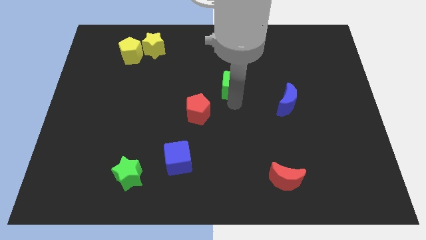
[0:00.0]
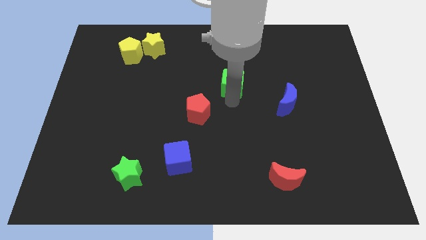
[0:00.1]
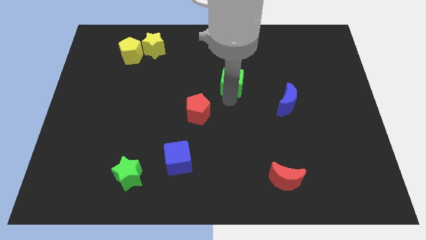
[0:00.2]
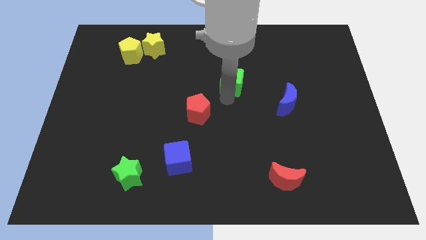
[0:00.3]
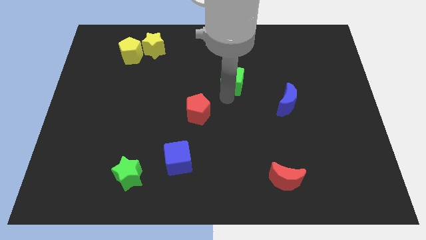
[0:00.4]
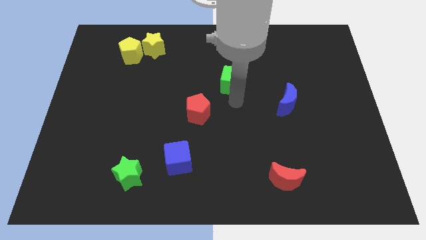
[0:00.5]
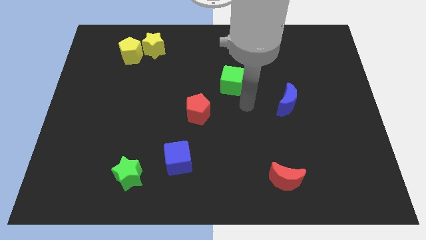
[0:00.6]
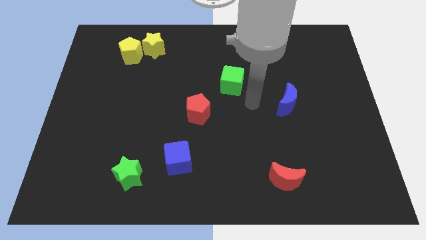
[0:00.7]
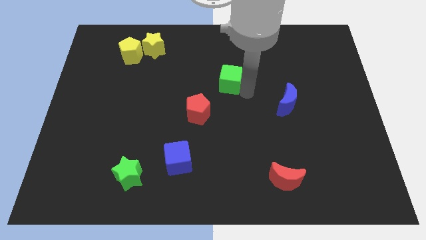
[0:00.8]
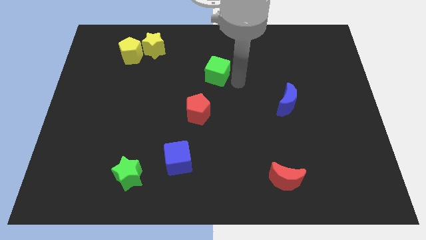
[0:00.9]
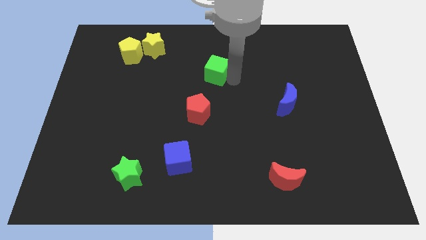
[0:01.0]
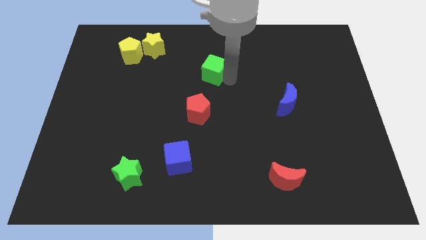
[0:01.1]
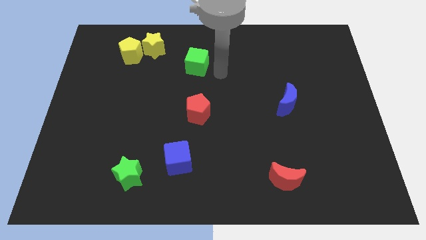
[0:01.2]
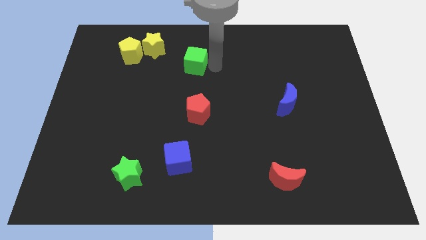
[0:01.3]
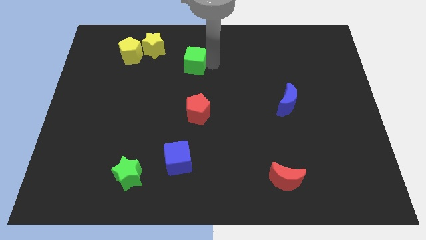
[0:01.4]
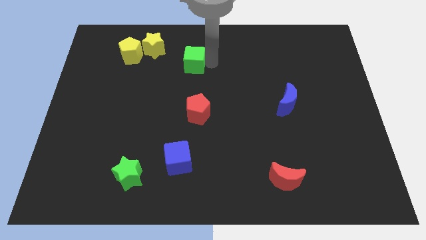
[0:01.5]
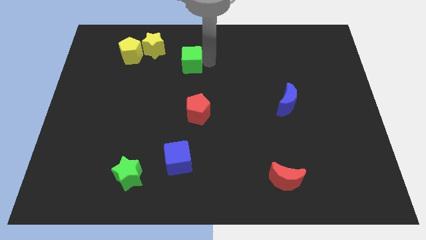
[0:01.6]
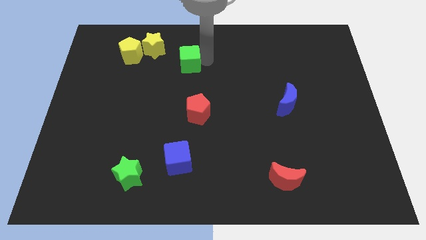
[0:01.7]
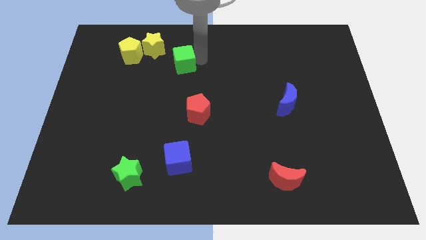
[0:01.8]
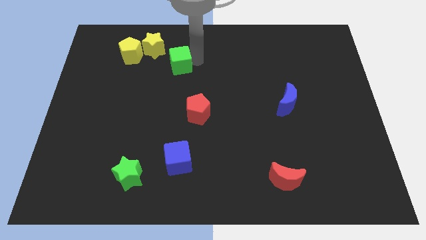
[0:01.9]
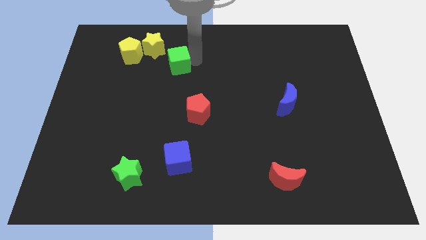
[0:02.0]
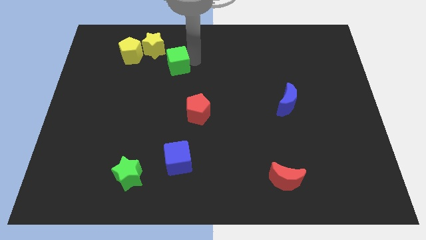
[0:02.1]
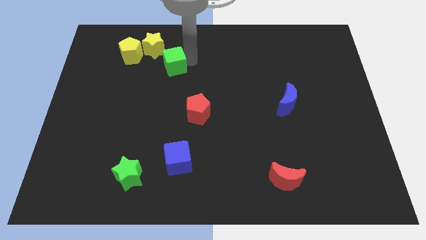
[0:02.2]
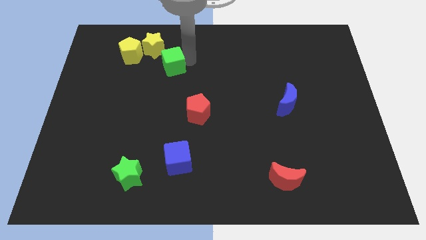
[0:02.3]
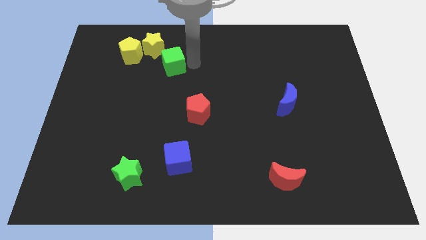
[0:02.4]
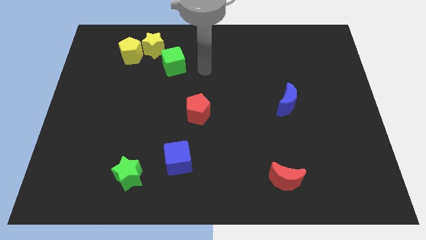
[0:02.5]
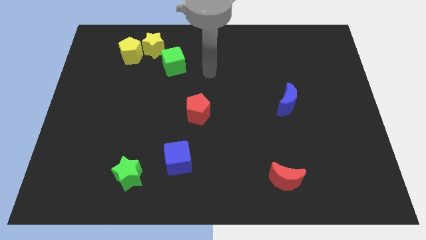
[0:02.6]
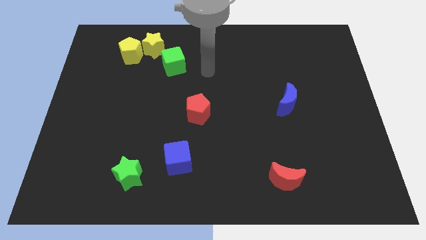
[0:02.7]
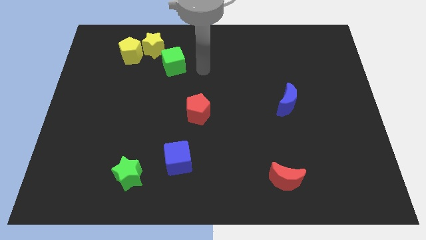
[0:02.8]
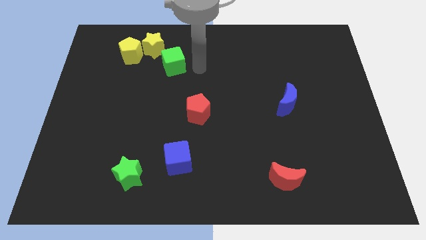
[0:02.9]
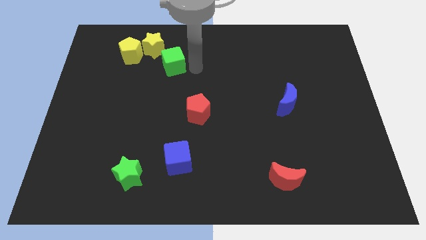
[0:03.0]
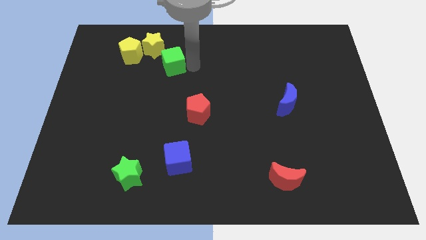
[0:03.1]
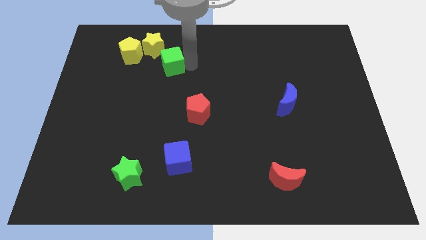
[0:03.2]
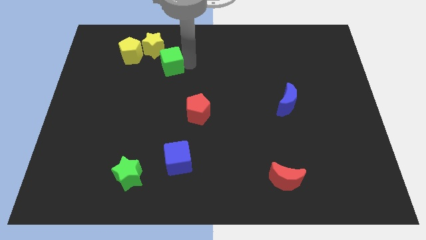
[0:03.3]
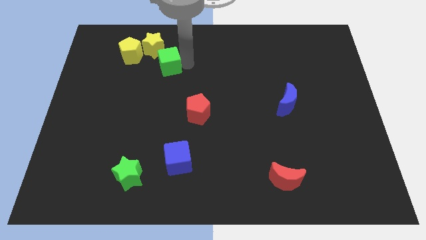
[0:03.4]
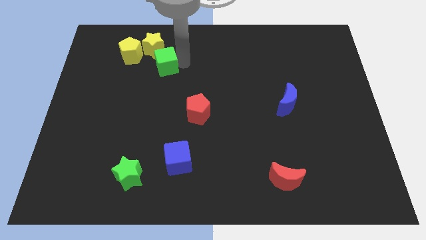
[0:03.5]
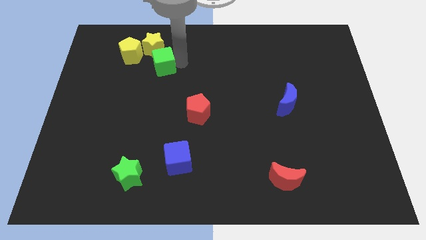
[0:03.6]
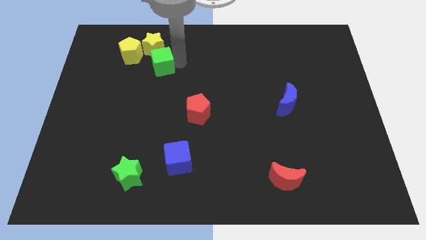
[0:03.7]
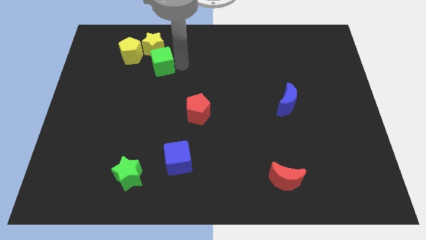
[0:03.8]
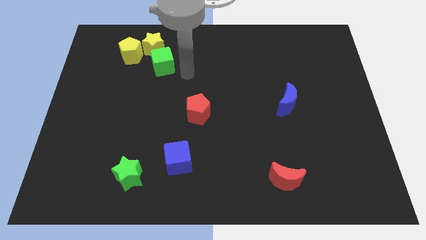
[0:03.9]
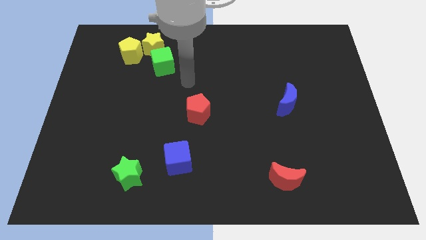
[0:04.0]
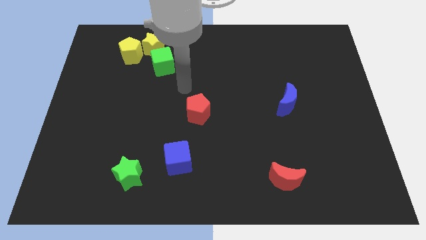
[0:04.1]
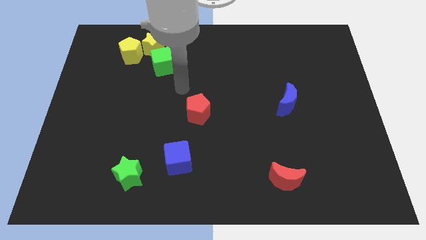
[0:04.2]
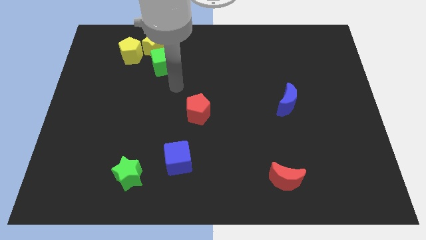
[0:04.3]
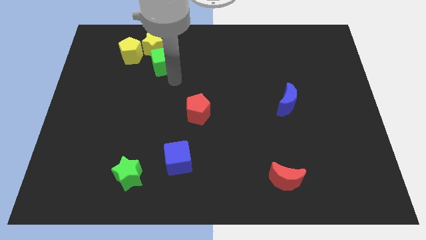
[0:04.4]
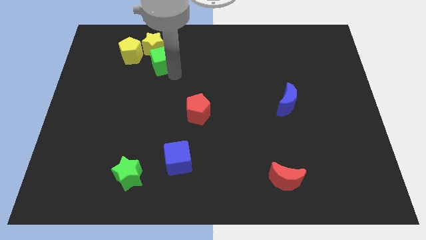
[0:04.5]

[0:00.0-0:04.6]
place the green cube below the yellow star

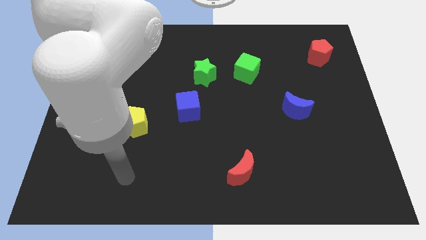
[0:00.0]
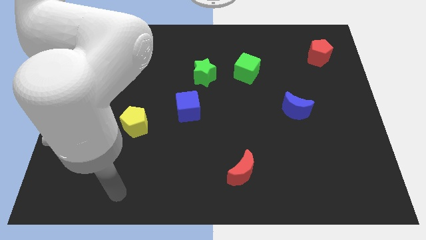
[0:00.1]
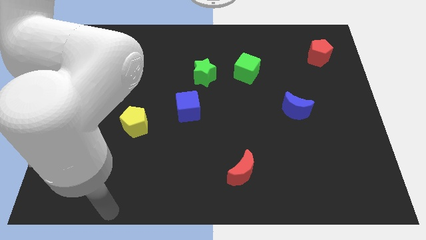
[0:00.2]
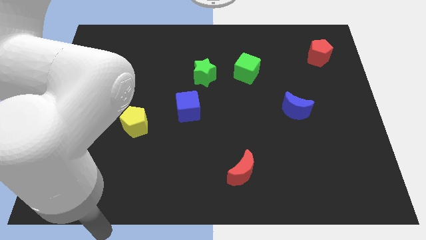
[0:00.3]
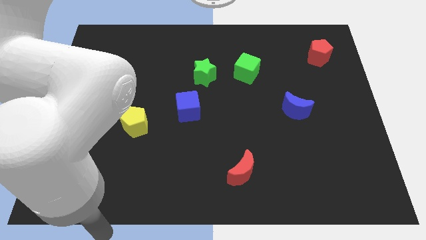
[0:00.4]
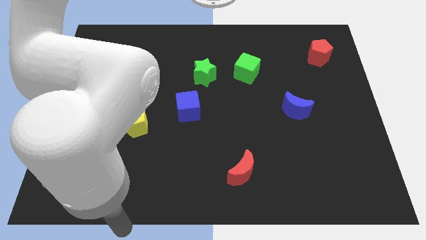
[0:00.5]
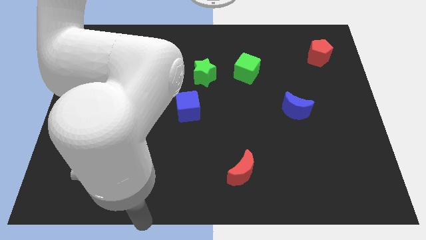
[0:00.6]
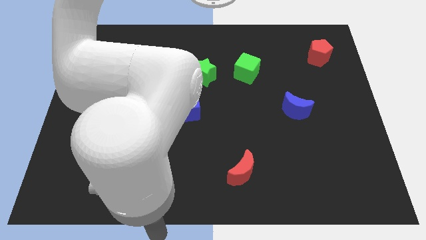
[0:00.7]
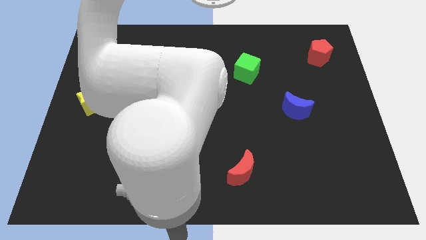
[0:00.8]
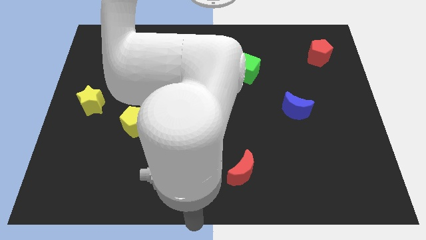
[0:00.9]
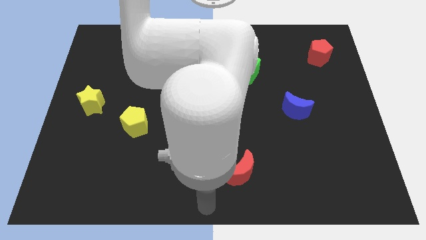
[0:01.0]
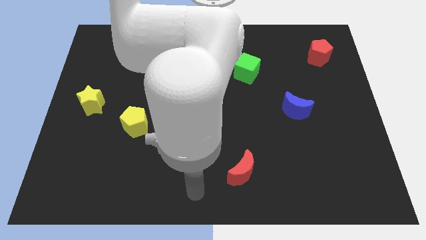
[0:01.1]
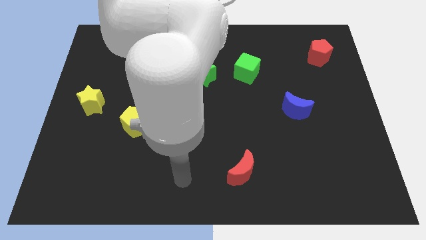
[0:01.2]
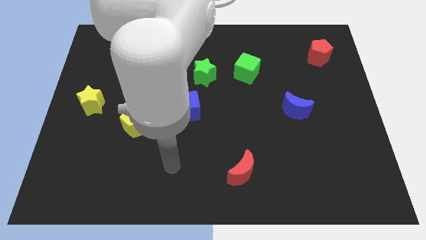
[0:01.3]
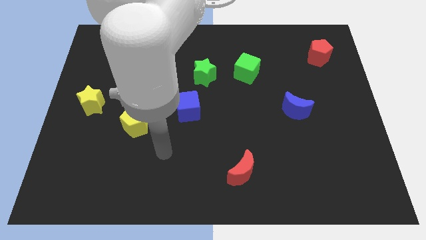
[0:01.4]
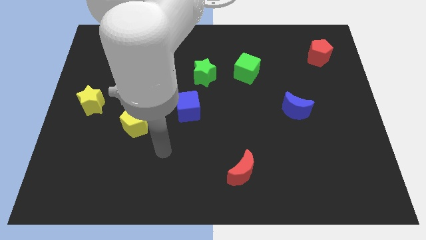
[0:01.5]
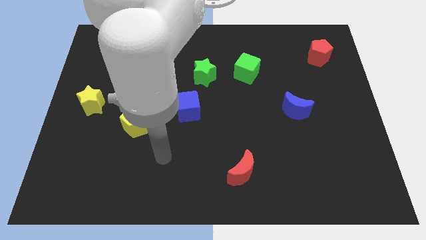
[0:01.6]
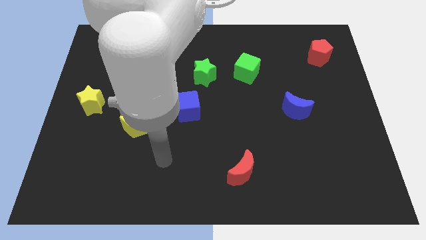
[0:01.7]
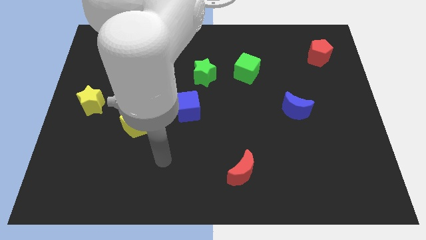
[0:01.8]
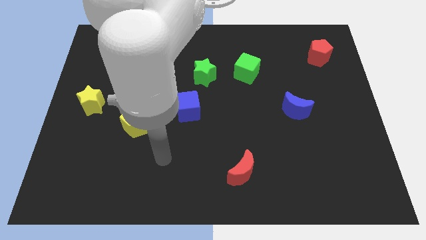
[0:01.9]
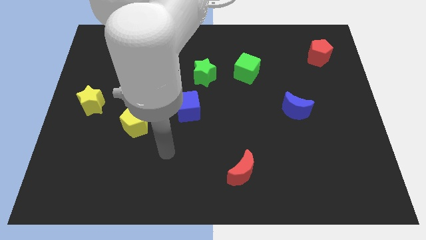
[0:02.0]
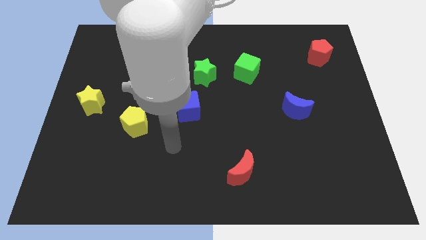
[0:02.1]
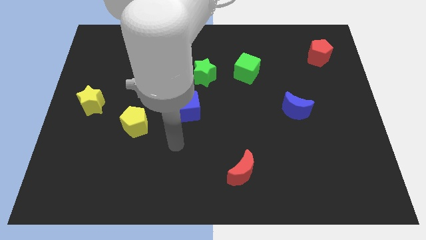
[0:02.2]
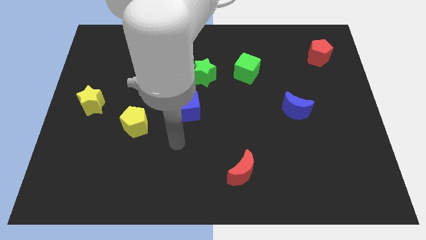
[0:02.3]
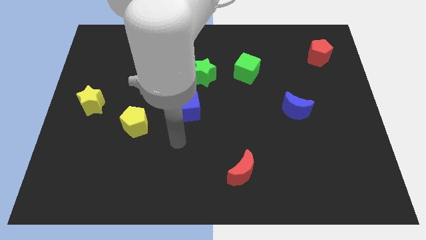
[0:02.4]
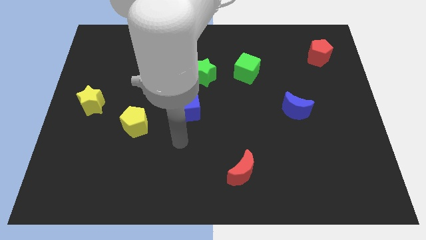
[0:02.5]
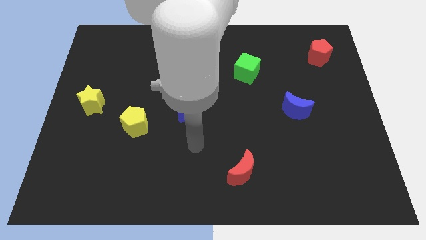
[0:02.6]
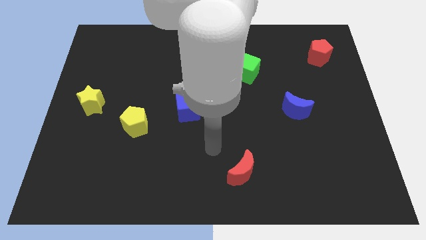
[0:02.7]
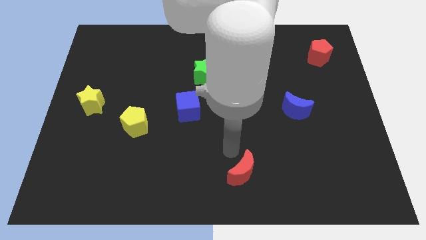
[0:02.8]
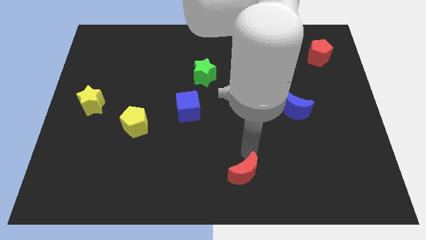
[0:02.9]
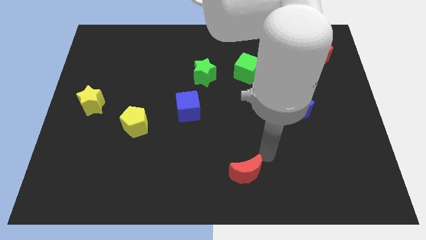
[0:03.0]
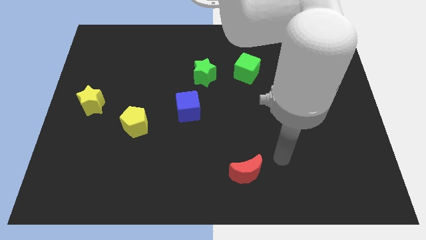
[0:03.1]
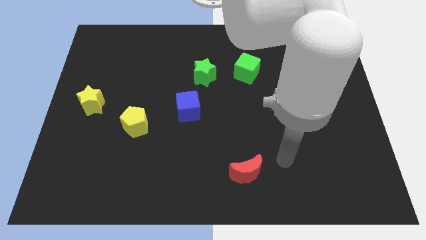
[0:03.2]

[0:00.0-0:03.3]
move your arm near to the red moon

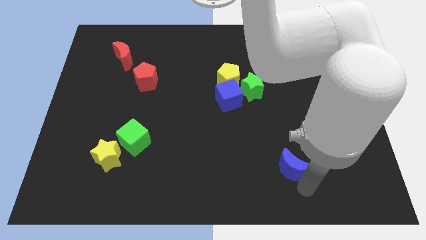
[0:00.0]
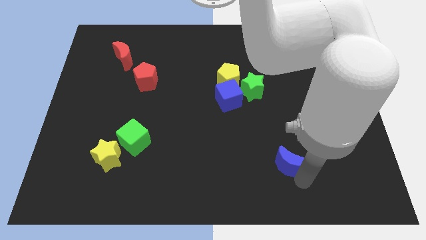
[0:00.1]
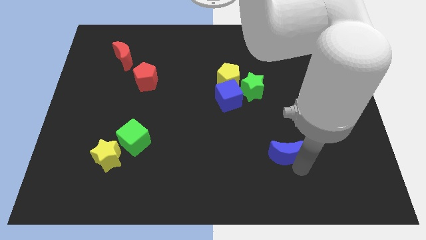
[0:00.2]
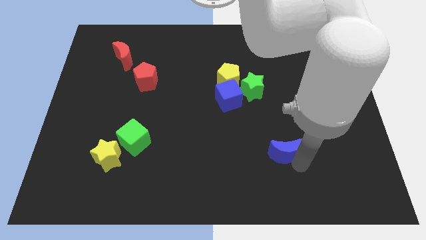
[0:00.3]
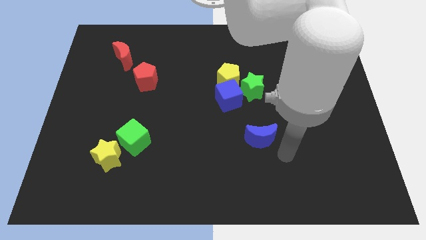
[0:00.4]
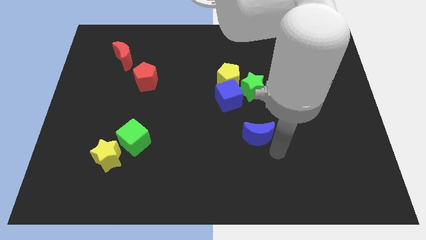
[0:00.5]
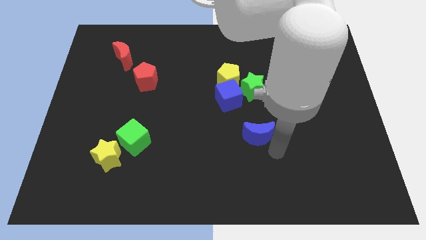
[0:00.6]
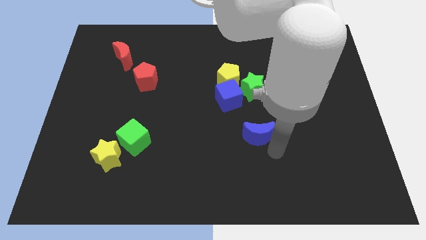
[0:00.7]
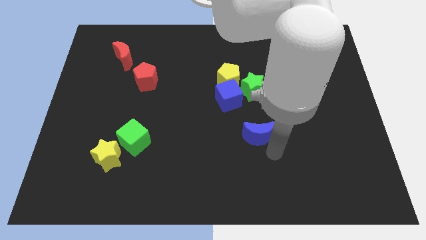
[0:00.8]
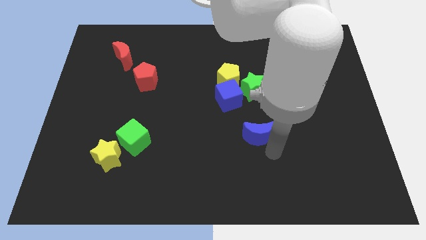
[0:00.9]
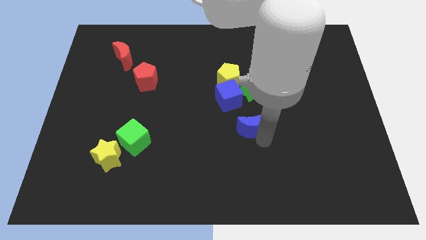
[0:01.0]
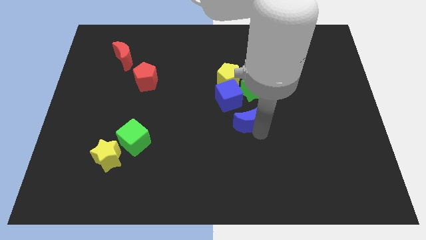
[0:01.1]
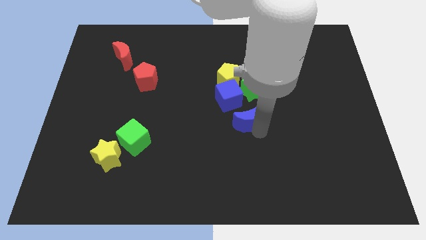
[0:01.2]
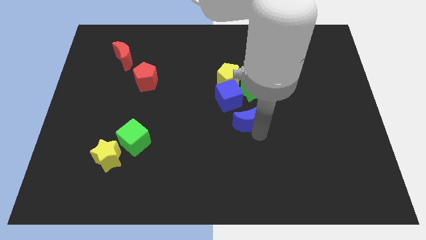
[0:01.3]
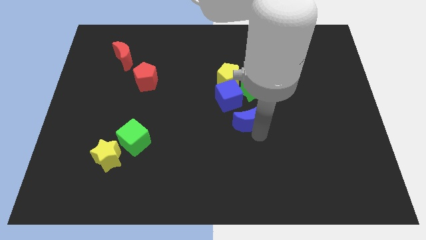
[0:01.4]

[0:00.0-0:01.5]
push blue moon below blue cube

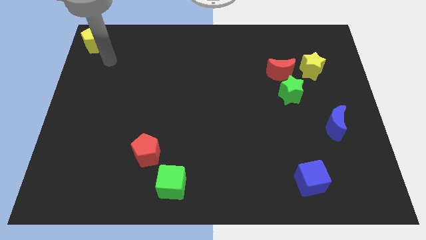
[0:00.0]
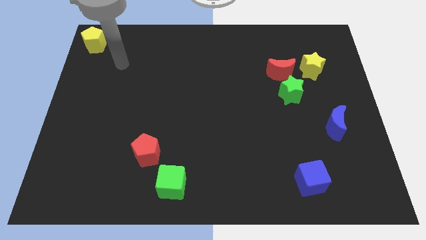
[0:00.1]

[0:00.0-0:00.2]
move the yellow pentagon to the top left side of the board
